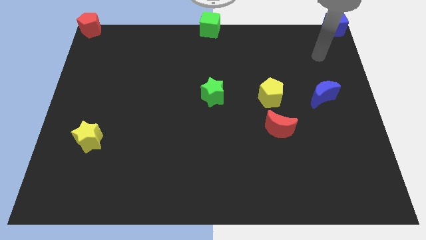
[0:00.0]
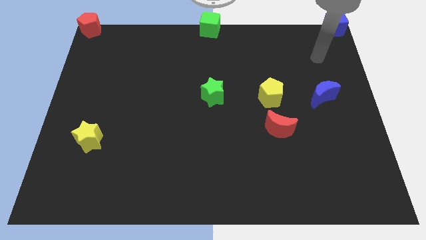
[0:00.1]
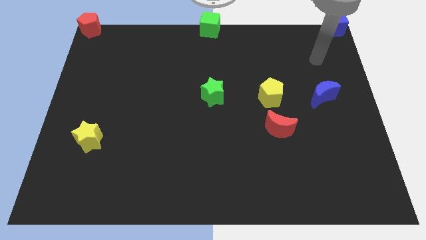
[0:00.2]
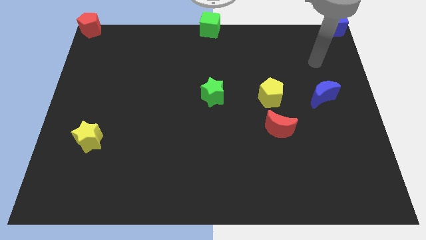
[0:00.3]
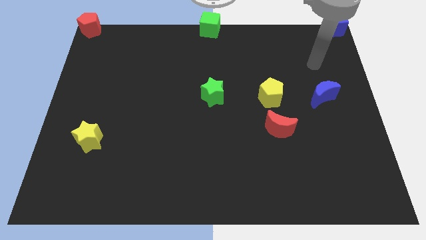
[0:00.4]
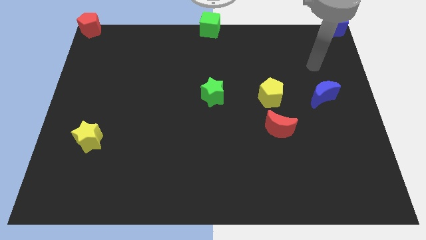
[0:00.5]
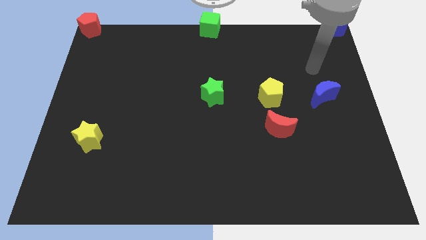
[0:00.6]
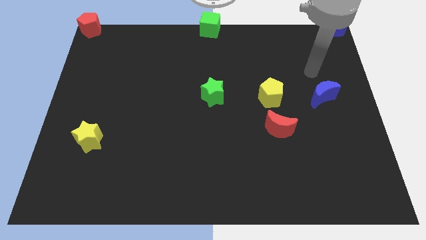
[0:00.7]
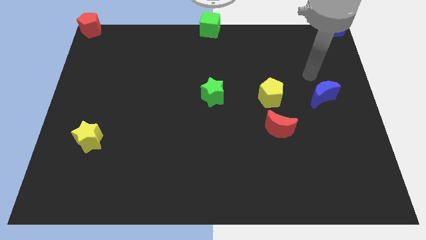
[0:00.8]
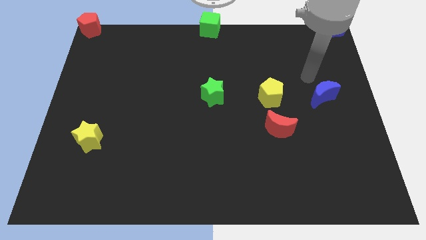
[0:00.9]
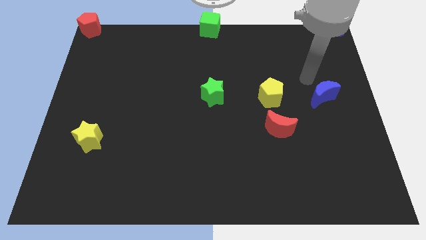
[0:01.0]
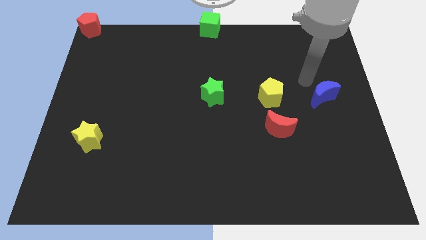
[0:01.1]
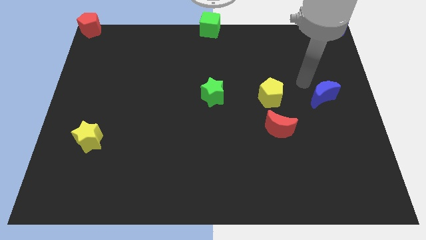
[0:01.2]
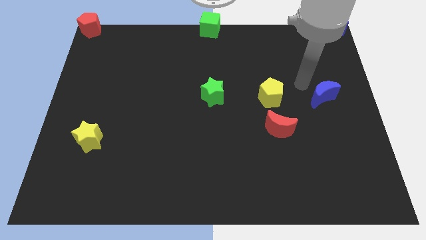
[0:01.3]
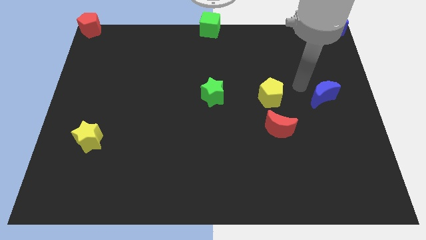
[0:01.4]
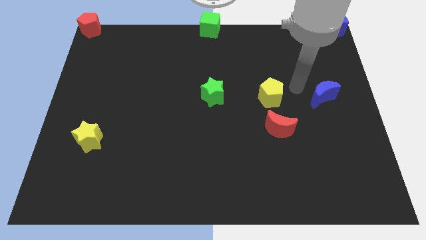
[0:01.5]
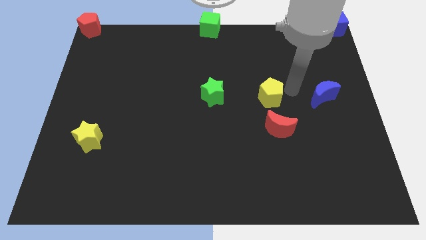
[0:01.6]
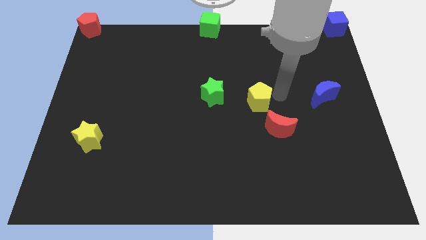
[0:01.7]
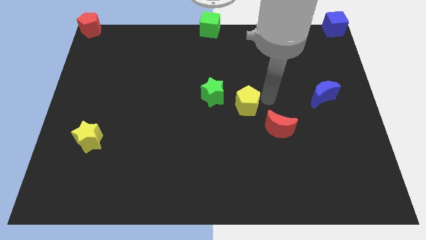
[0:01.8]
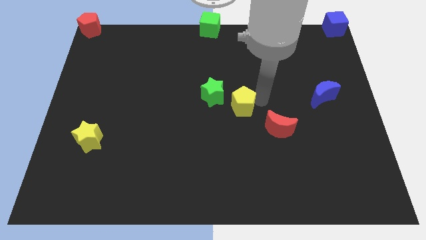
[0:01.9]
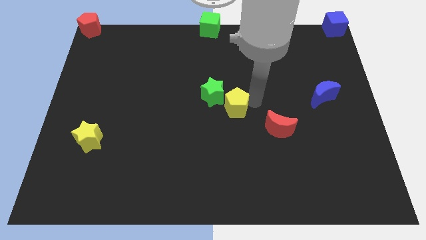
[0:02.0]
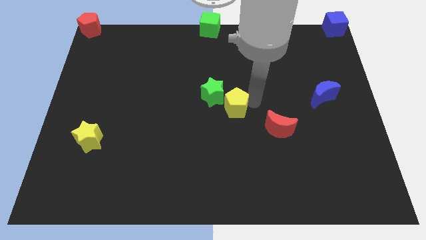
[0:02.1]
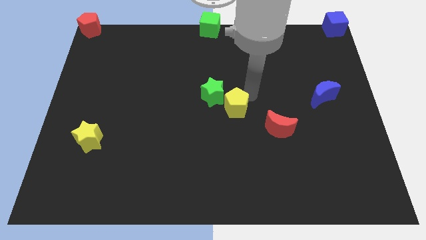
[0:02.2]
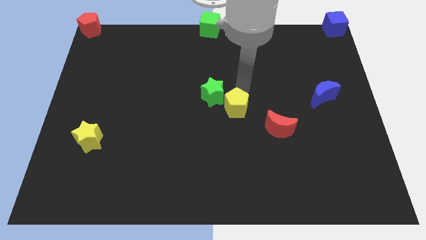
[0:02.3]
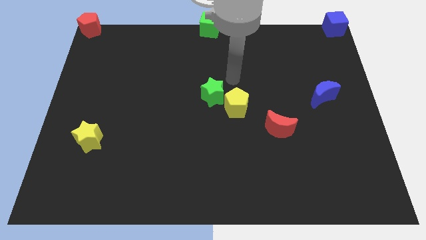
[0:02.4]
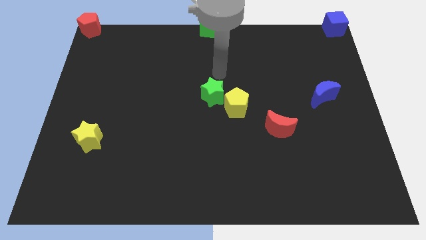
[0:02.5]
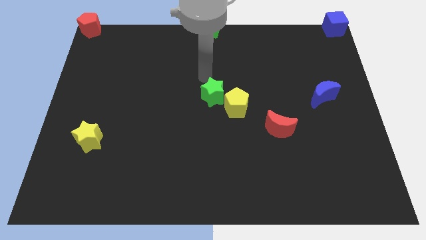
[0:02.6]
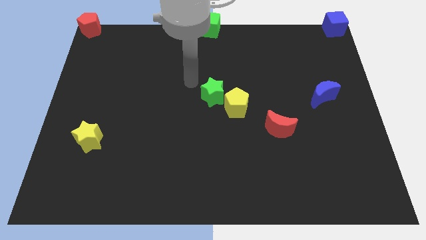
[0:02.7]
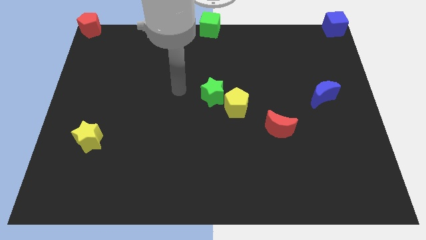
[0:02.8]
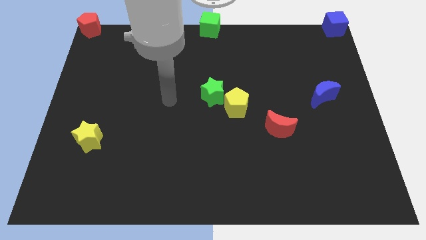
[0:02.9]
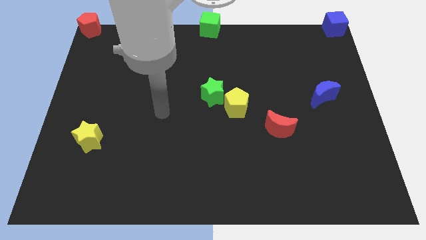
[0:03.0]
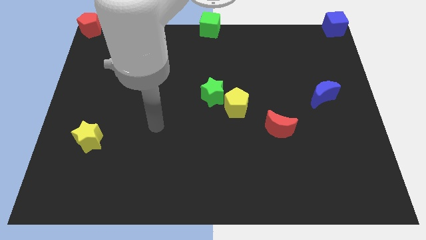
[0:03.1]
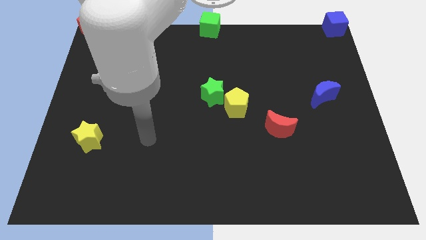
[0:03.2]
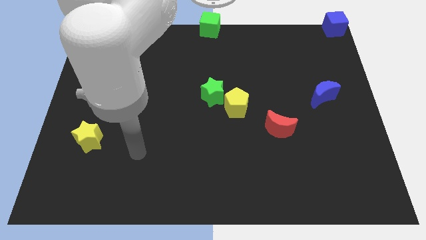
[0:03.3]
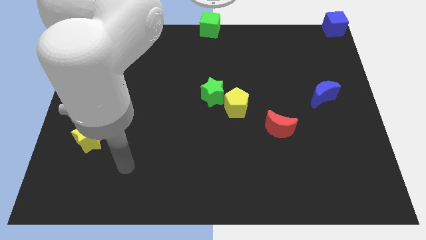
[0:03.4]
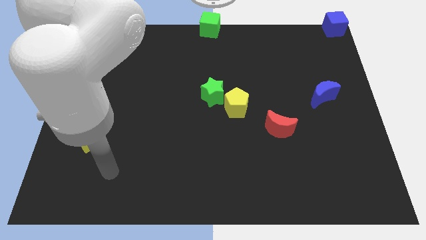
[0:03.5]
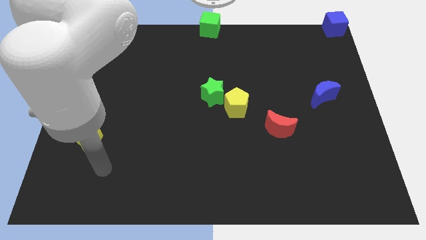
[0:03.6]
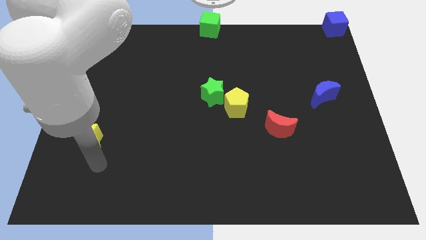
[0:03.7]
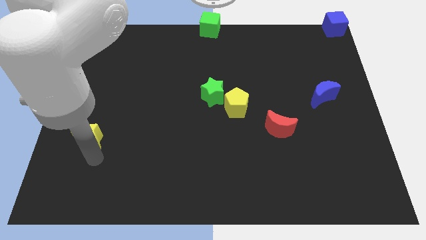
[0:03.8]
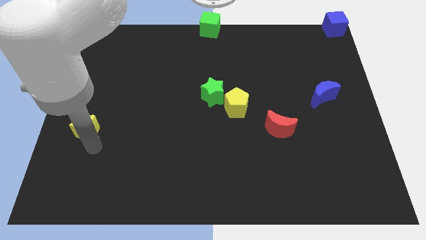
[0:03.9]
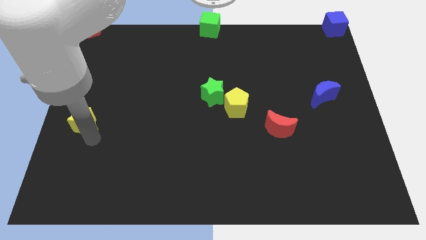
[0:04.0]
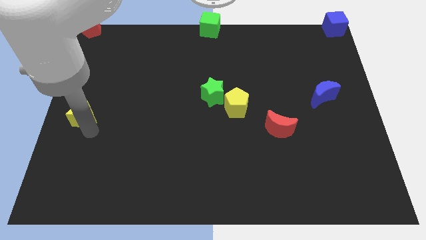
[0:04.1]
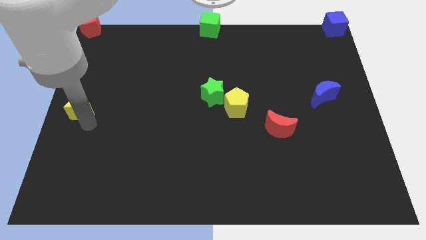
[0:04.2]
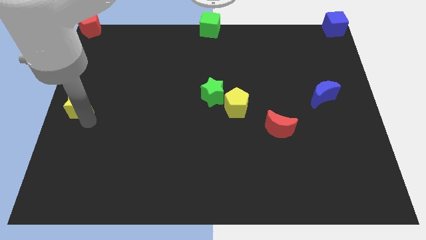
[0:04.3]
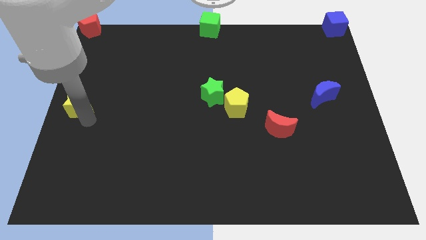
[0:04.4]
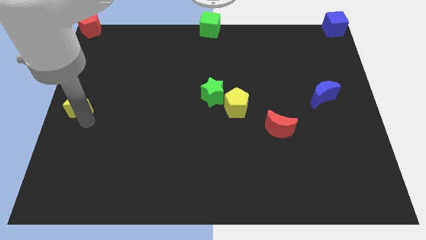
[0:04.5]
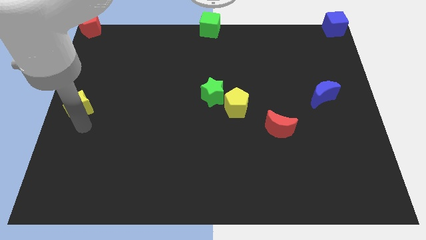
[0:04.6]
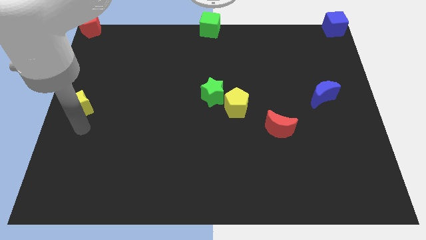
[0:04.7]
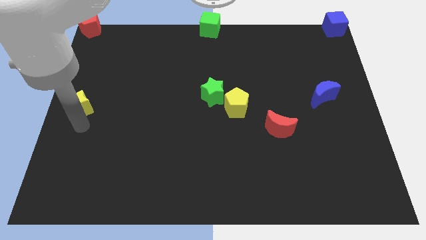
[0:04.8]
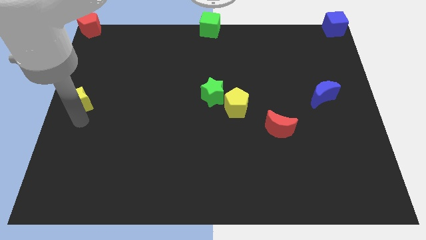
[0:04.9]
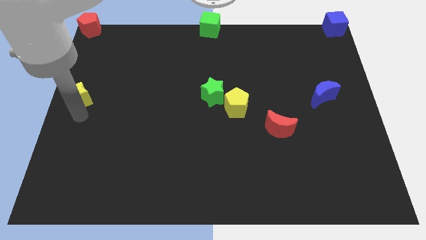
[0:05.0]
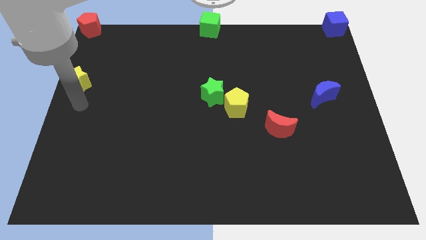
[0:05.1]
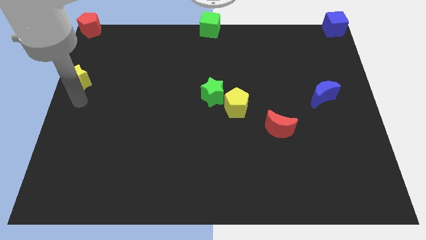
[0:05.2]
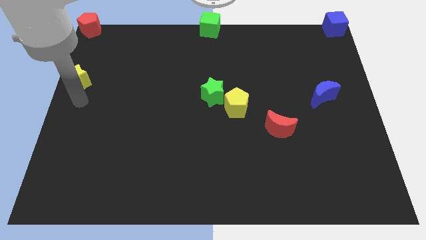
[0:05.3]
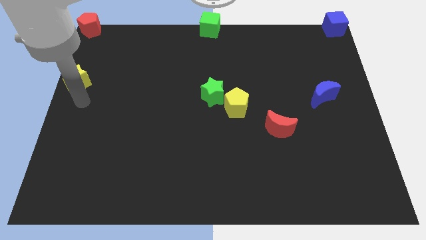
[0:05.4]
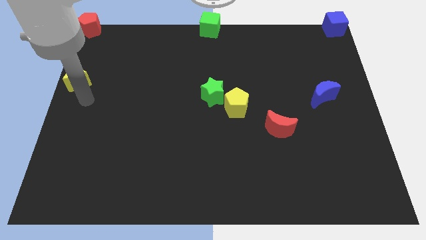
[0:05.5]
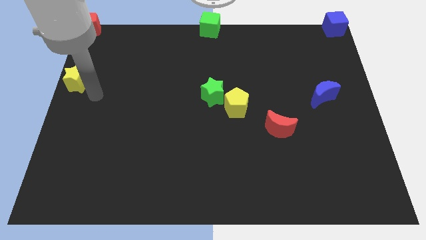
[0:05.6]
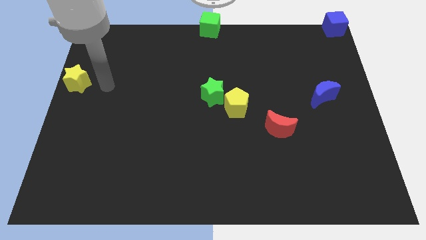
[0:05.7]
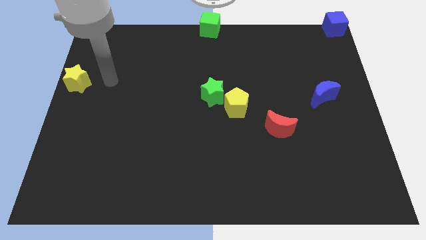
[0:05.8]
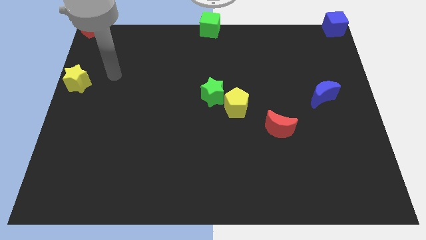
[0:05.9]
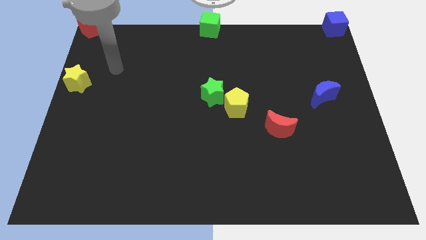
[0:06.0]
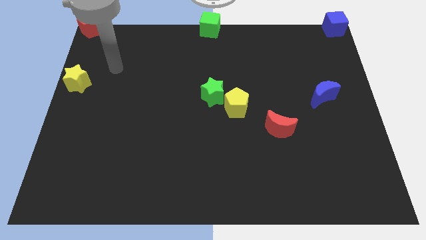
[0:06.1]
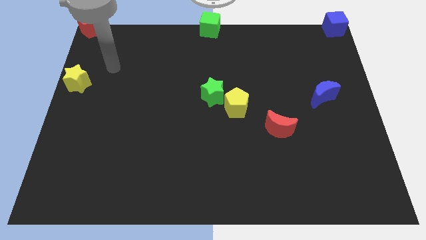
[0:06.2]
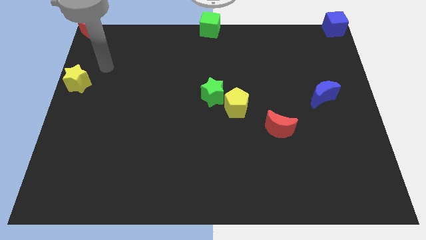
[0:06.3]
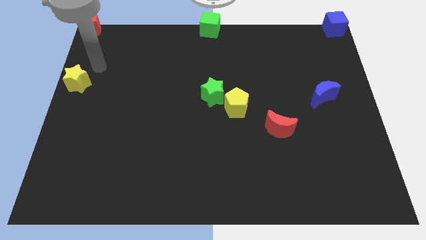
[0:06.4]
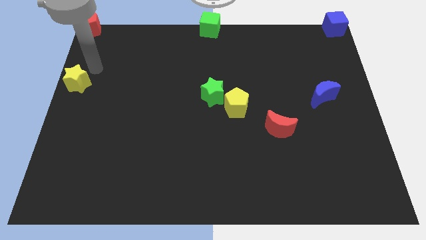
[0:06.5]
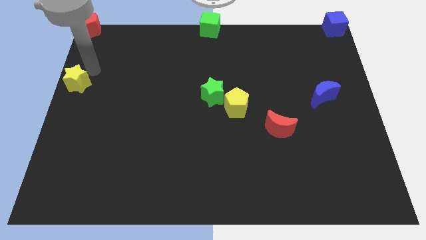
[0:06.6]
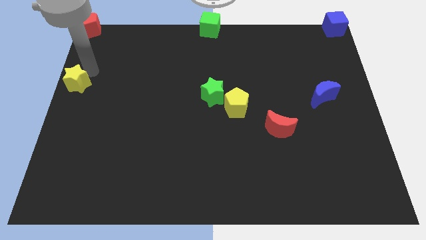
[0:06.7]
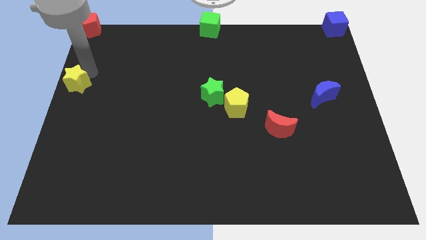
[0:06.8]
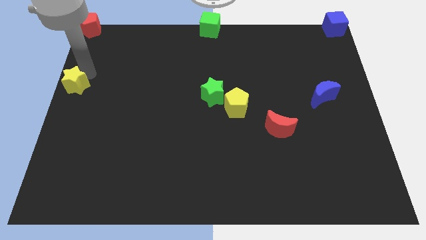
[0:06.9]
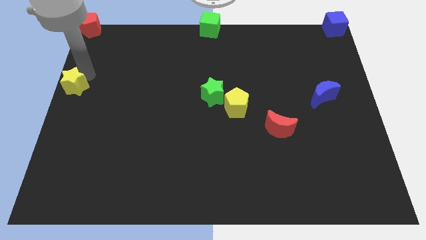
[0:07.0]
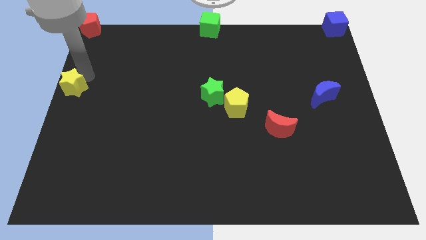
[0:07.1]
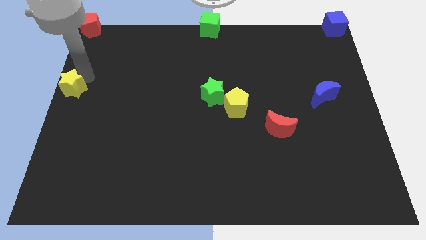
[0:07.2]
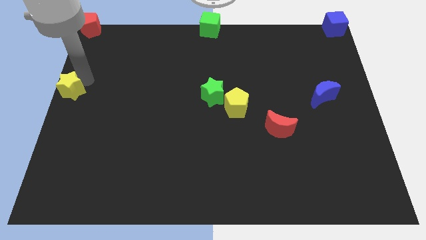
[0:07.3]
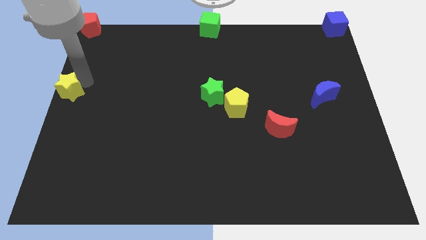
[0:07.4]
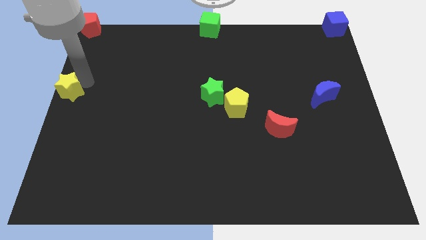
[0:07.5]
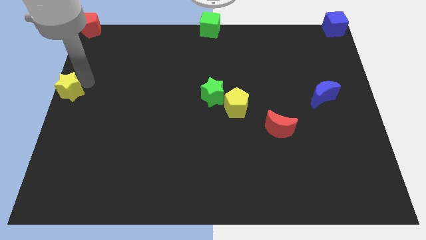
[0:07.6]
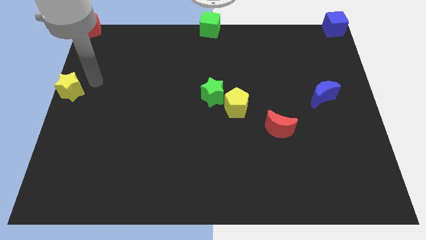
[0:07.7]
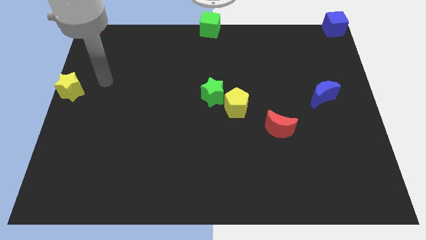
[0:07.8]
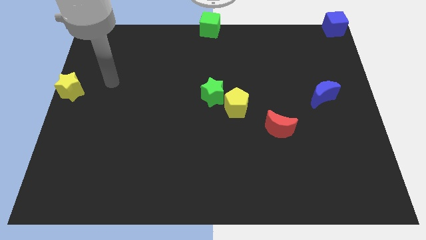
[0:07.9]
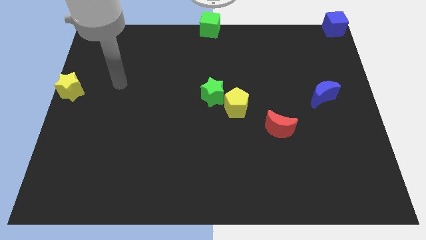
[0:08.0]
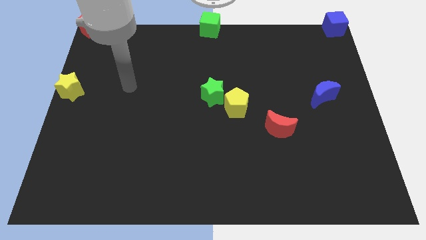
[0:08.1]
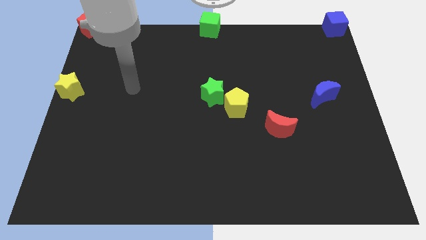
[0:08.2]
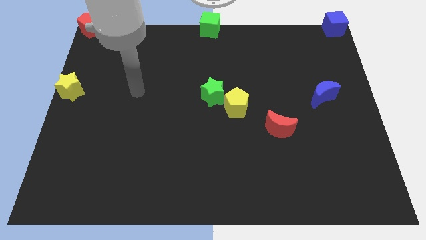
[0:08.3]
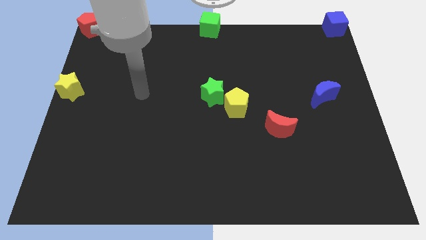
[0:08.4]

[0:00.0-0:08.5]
separate the blue cube towards the top right corner of the board

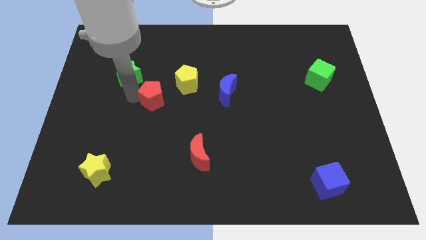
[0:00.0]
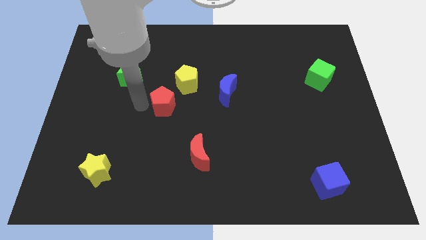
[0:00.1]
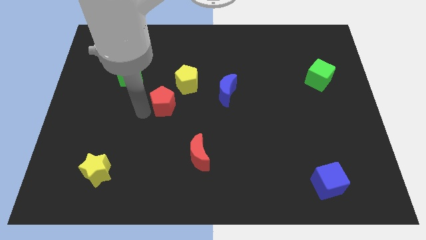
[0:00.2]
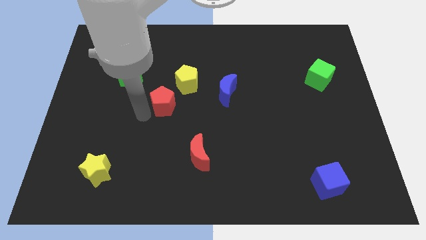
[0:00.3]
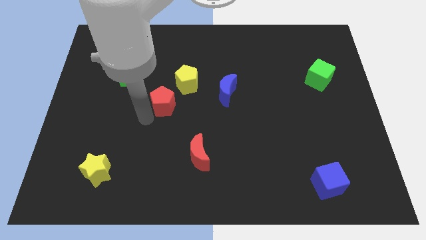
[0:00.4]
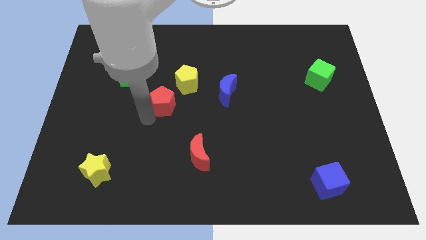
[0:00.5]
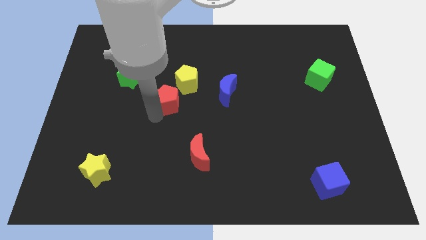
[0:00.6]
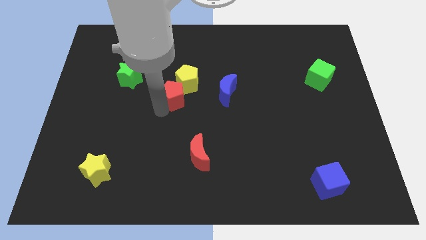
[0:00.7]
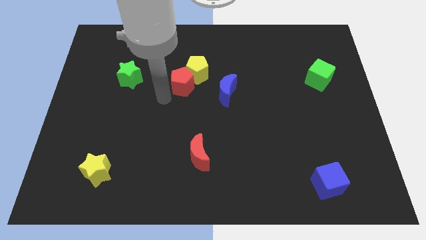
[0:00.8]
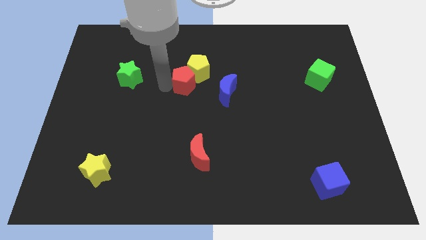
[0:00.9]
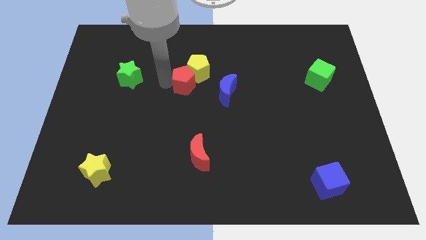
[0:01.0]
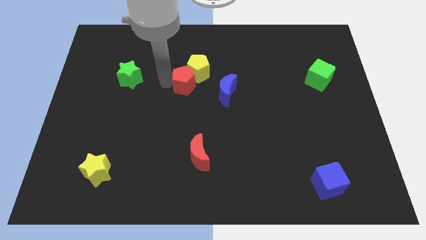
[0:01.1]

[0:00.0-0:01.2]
push red pentagon in to yellow pentagon
